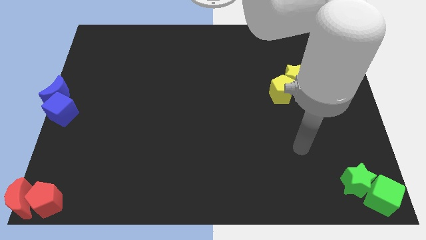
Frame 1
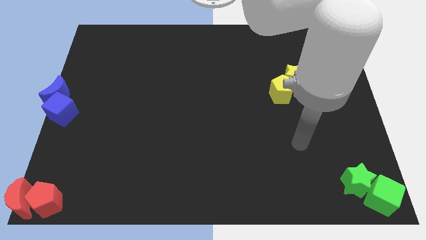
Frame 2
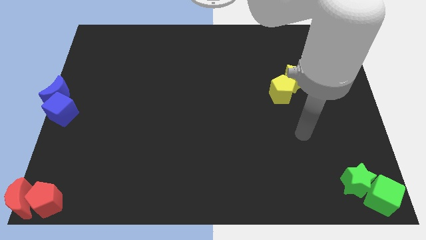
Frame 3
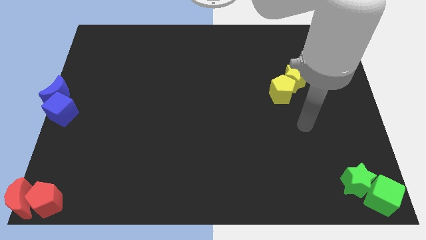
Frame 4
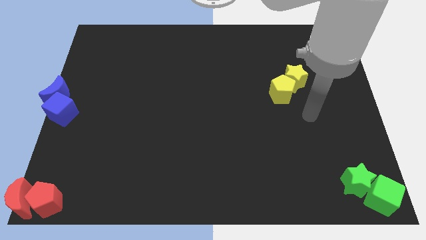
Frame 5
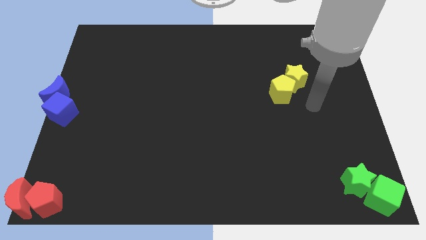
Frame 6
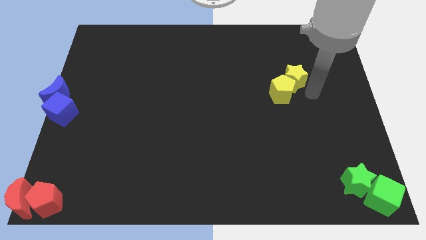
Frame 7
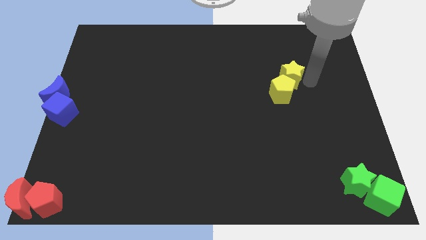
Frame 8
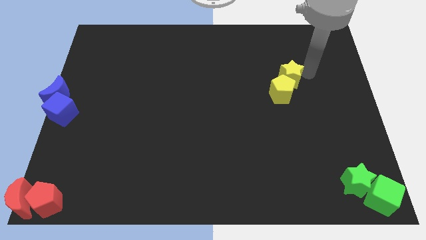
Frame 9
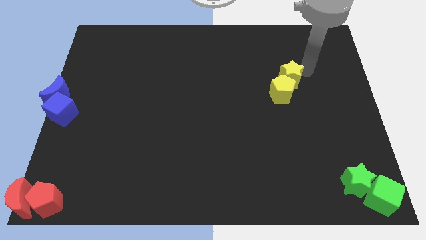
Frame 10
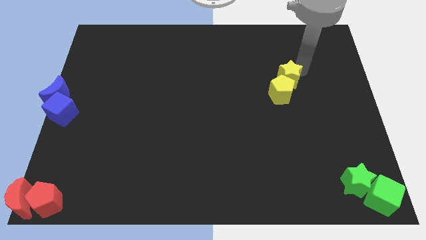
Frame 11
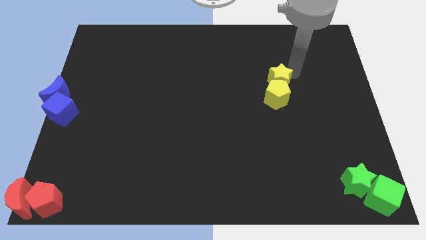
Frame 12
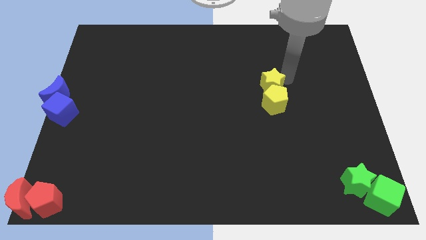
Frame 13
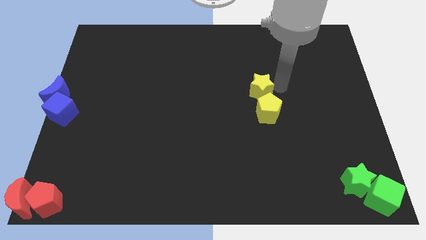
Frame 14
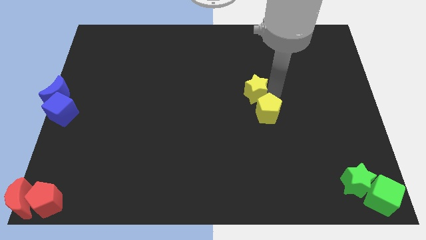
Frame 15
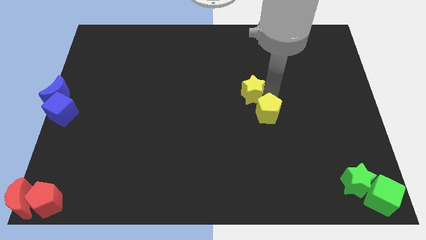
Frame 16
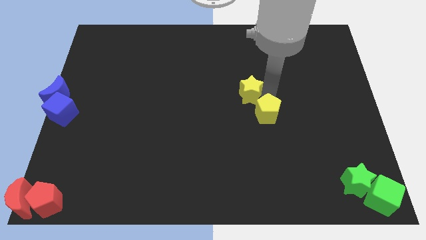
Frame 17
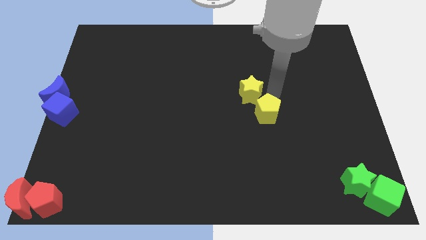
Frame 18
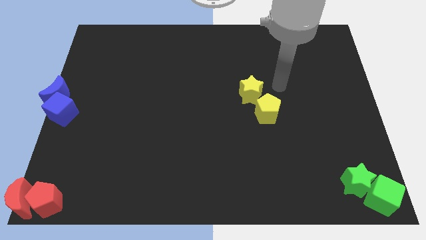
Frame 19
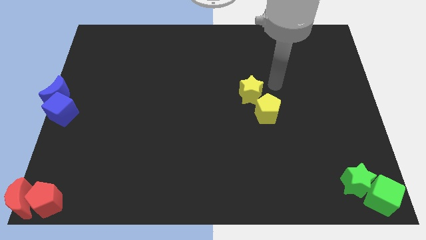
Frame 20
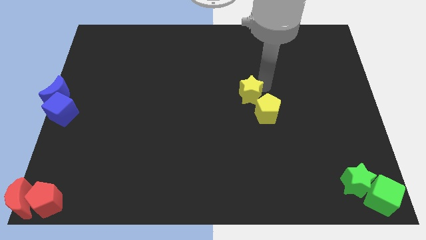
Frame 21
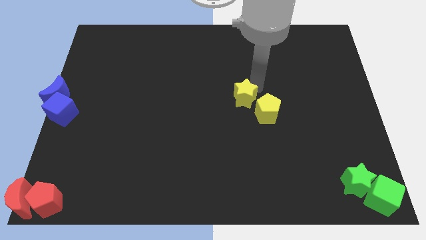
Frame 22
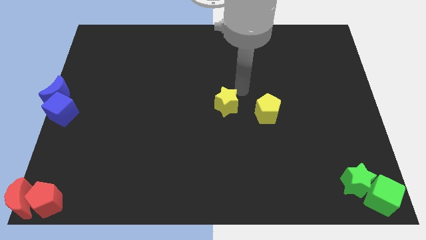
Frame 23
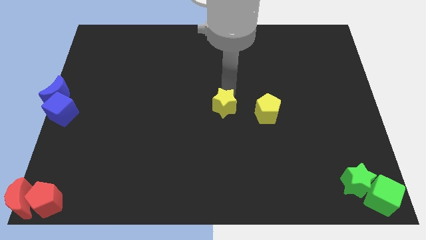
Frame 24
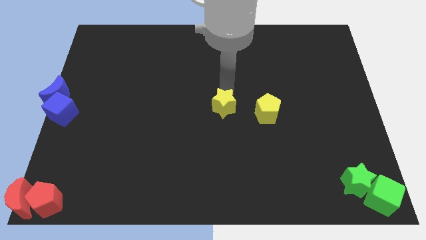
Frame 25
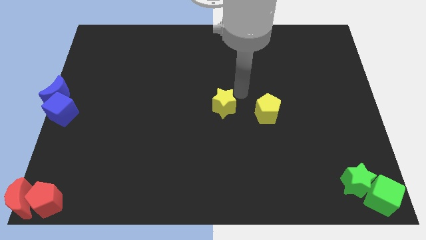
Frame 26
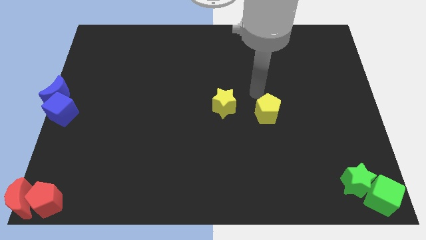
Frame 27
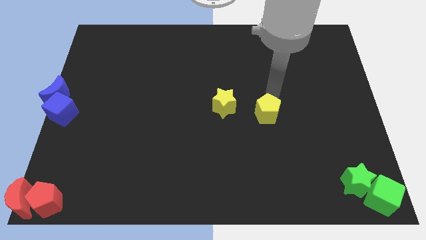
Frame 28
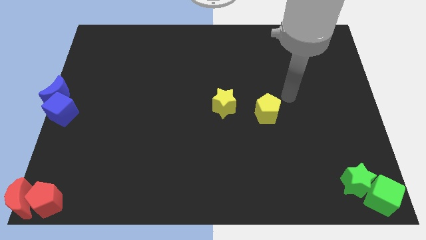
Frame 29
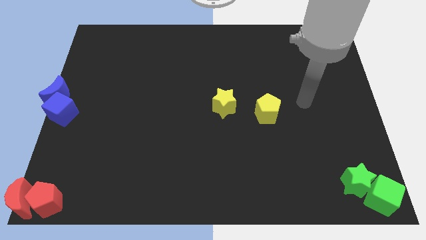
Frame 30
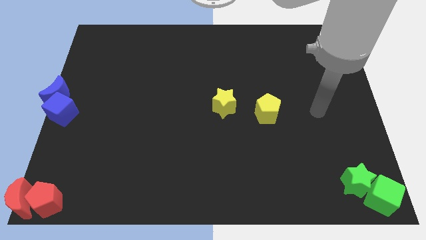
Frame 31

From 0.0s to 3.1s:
separate yellow star from yellow pentagon

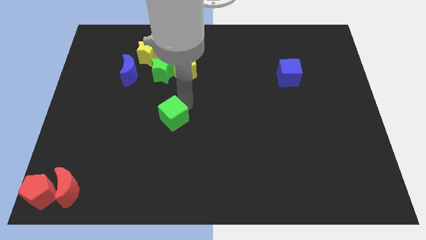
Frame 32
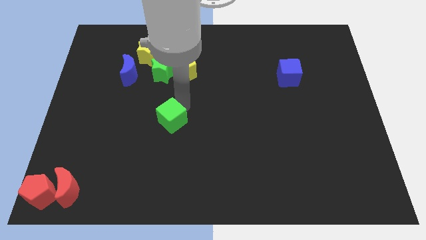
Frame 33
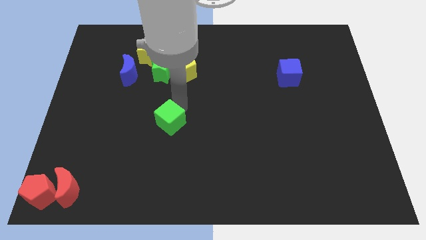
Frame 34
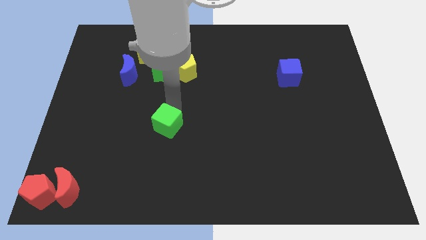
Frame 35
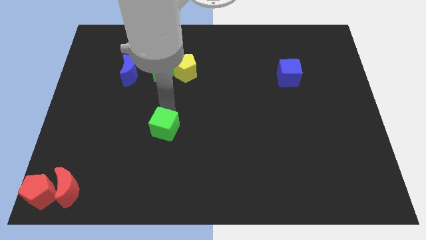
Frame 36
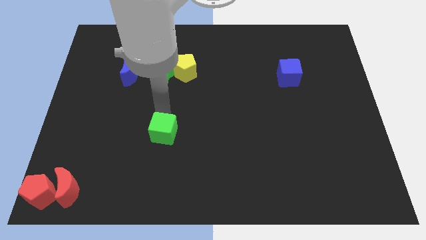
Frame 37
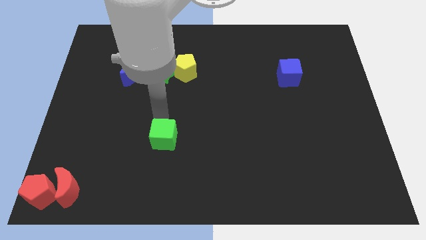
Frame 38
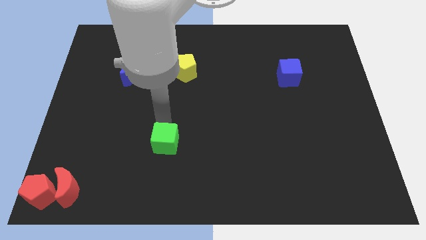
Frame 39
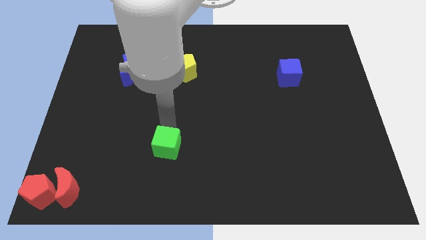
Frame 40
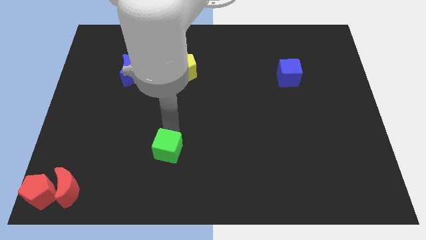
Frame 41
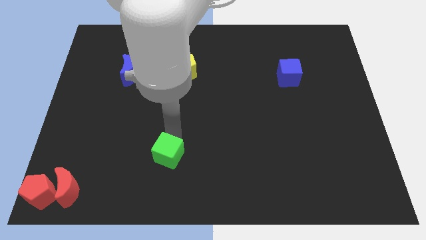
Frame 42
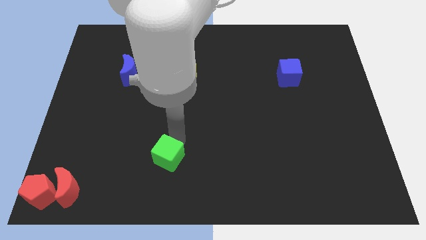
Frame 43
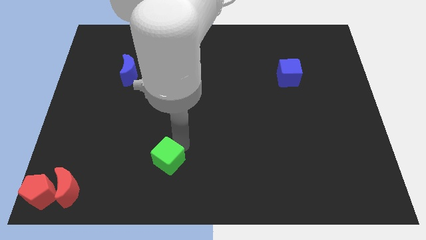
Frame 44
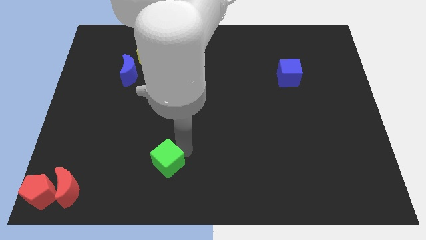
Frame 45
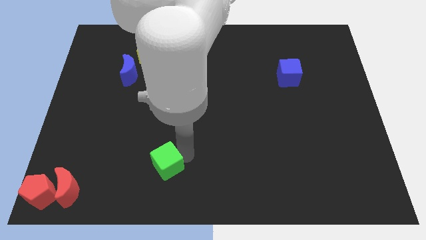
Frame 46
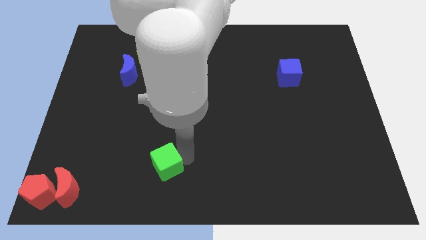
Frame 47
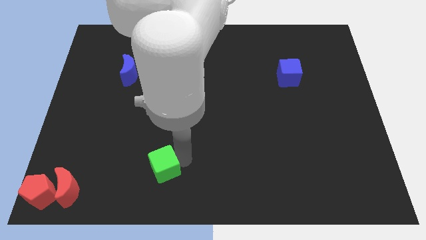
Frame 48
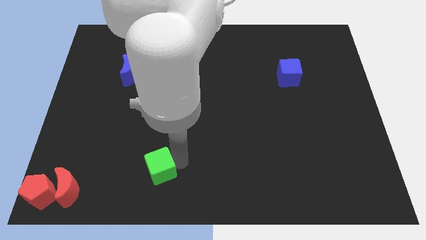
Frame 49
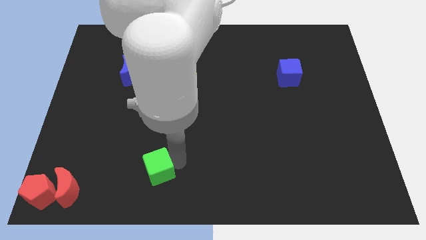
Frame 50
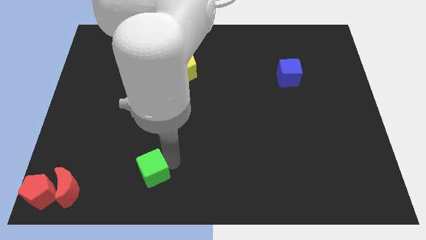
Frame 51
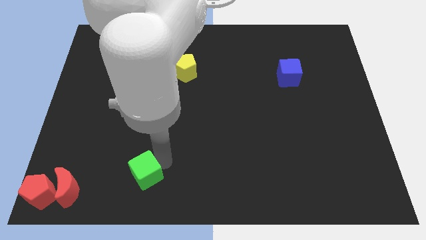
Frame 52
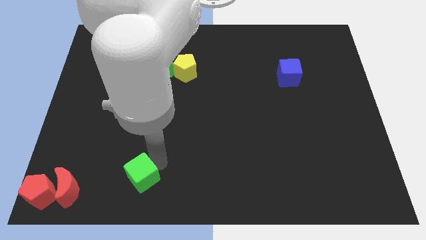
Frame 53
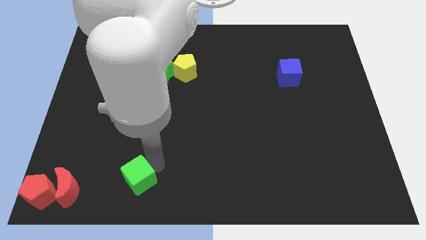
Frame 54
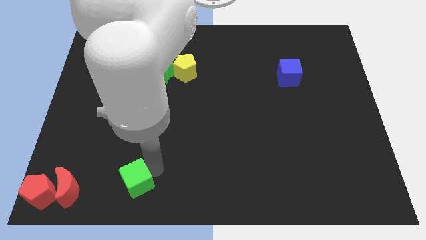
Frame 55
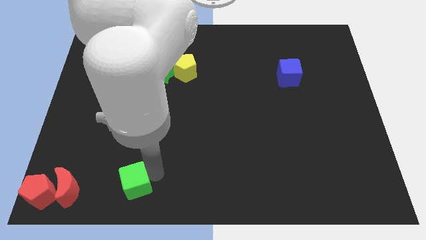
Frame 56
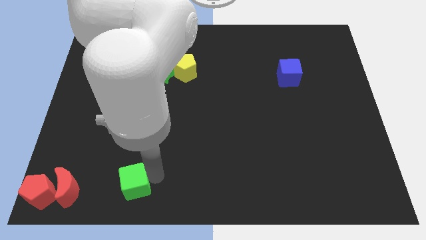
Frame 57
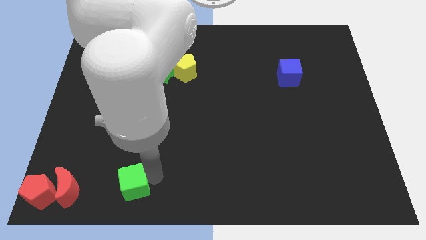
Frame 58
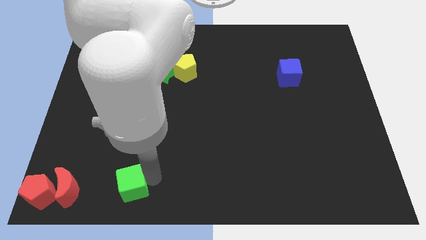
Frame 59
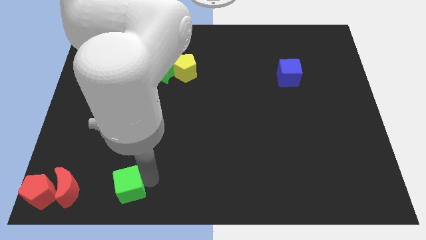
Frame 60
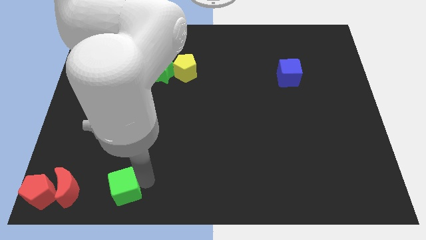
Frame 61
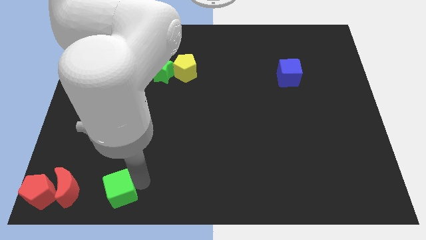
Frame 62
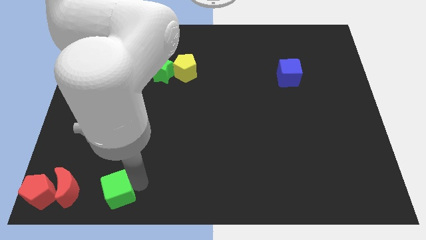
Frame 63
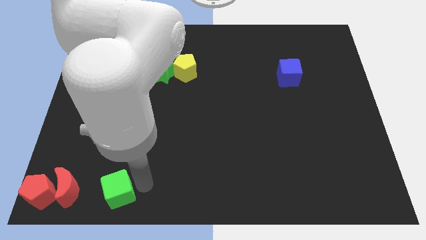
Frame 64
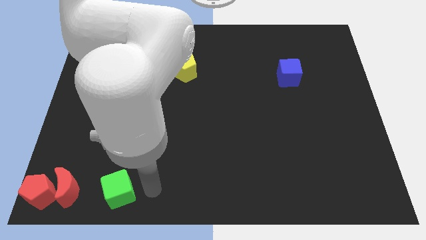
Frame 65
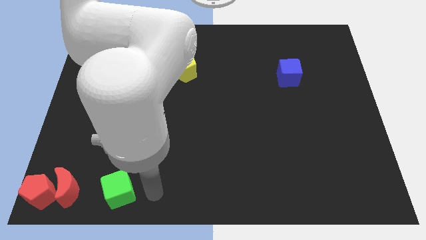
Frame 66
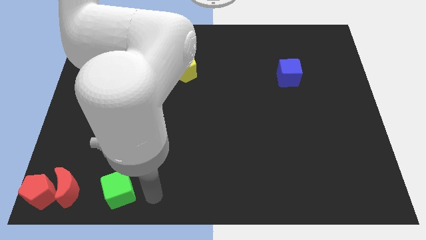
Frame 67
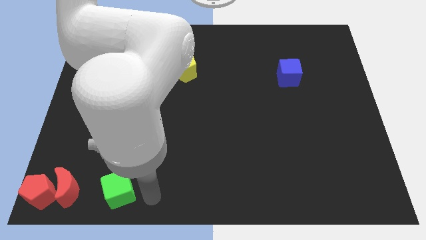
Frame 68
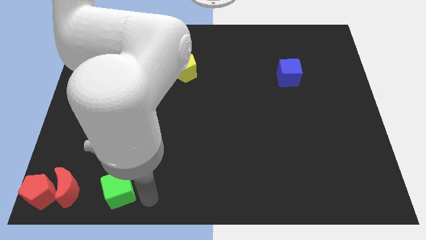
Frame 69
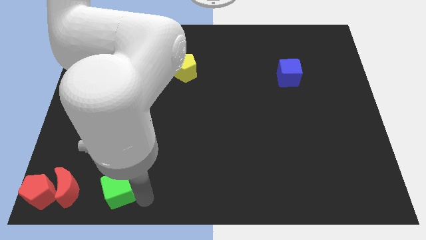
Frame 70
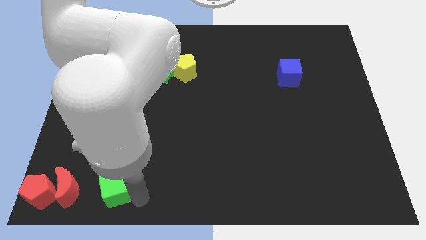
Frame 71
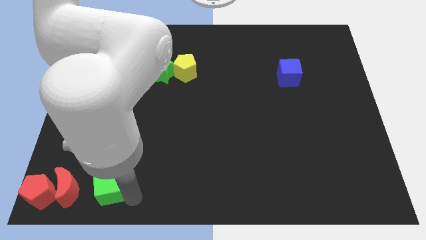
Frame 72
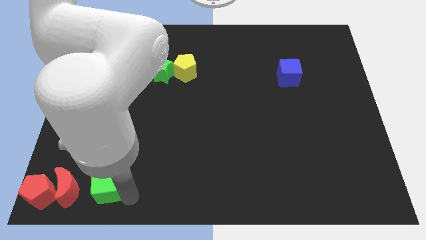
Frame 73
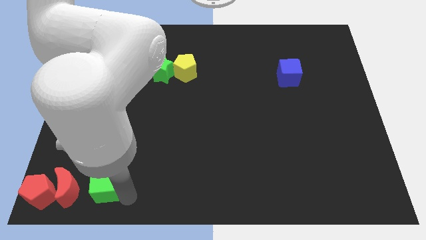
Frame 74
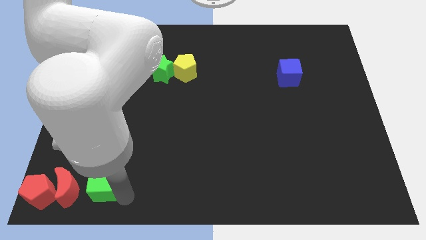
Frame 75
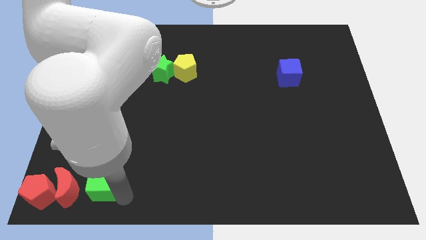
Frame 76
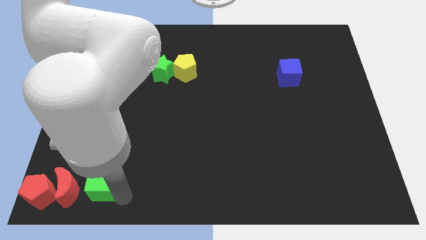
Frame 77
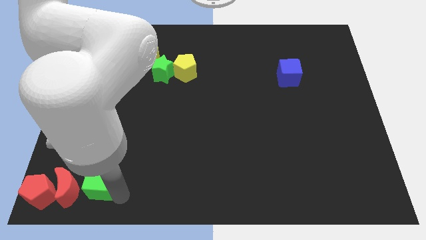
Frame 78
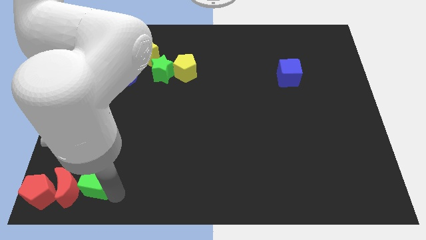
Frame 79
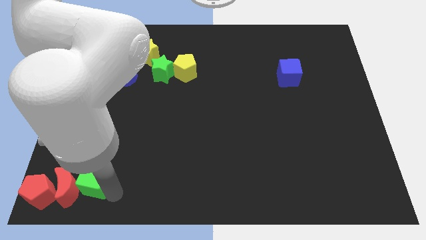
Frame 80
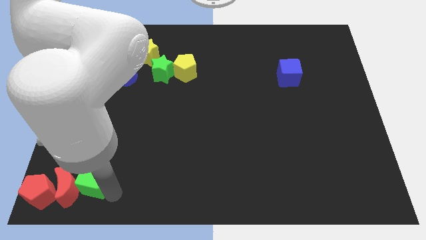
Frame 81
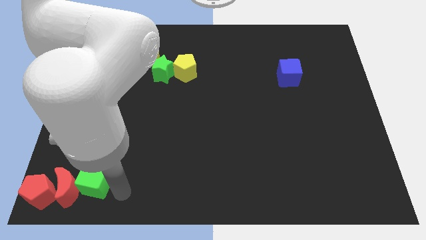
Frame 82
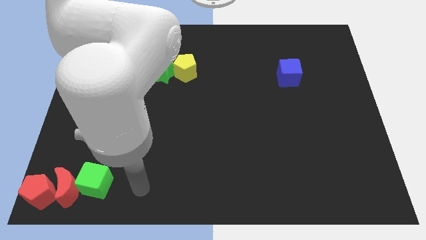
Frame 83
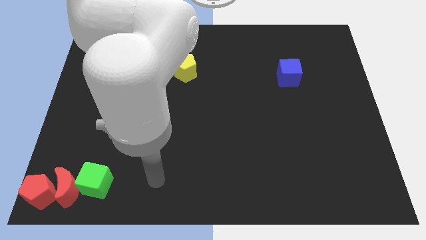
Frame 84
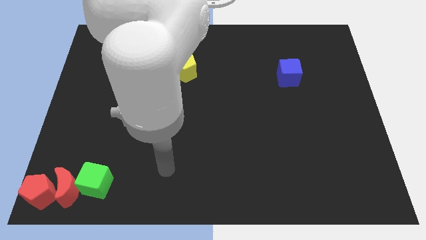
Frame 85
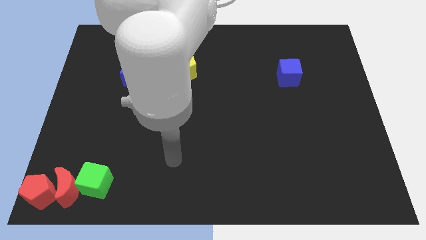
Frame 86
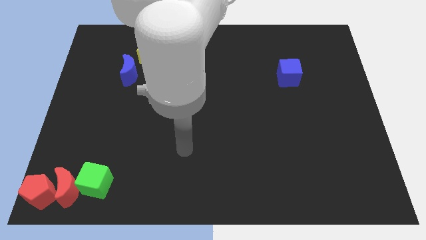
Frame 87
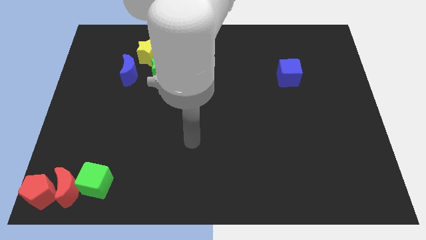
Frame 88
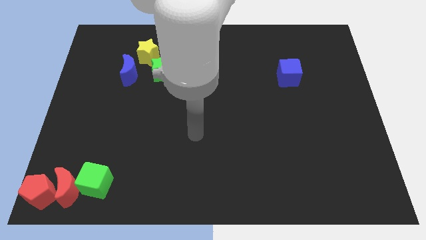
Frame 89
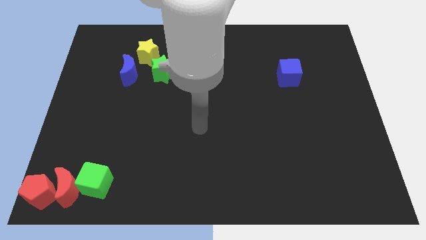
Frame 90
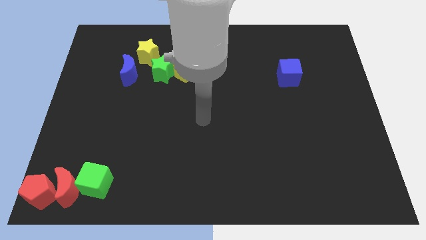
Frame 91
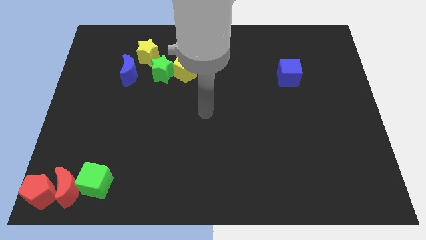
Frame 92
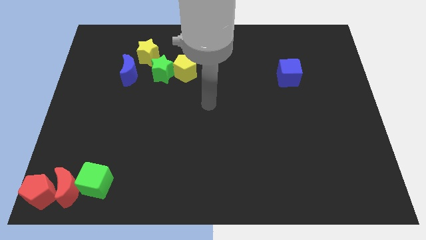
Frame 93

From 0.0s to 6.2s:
push the green cube towards the red crescent
